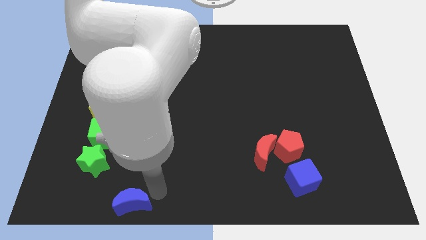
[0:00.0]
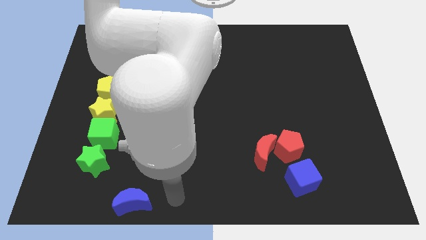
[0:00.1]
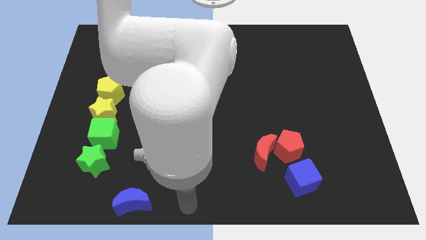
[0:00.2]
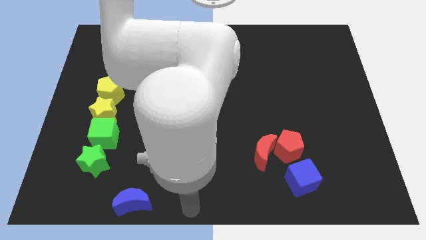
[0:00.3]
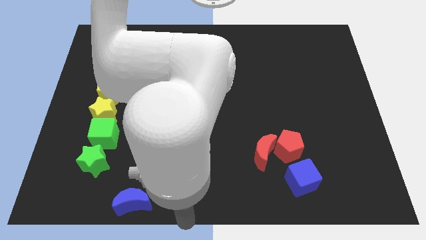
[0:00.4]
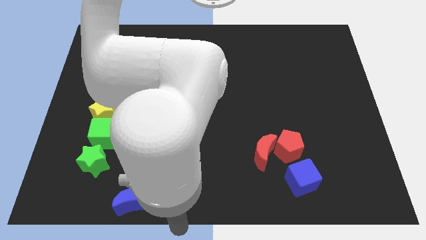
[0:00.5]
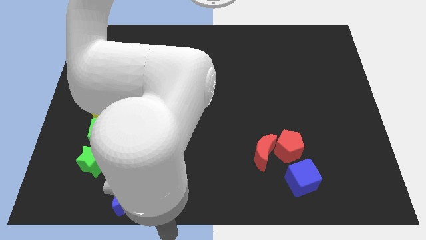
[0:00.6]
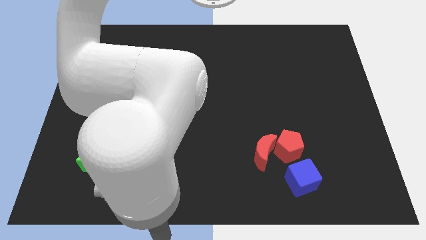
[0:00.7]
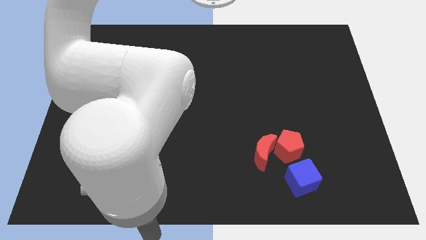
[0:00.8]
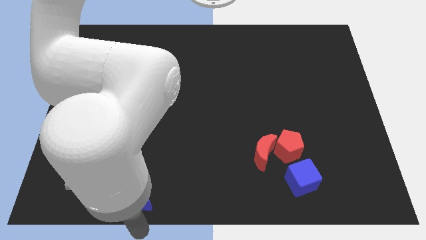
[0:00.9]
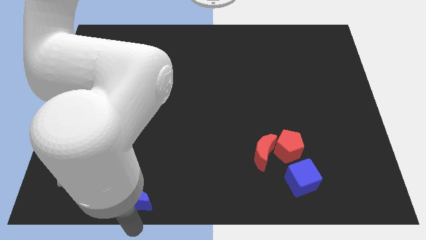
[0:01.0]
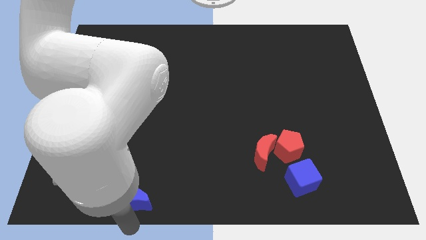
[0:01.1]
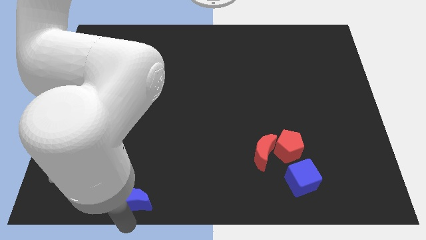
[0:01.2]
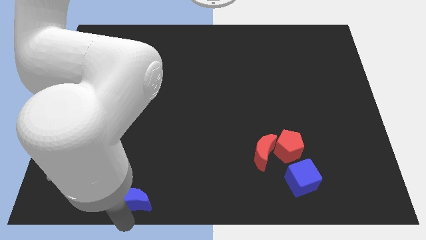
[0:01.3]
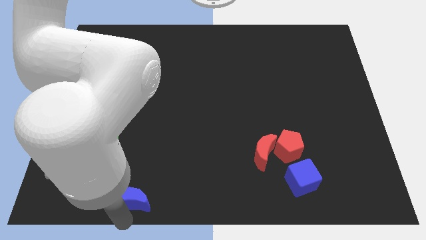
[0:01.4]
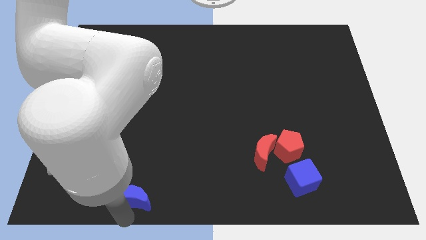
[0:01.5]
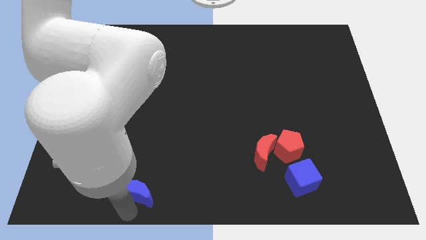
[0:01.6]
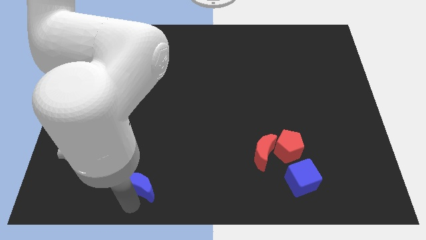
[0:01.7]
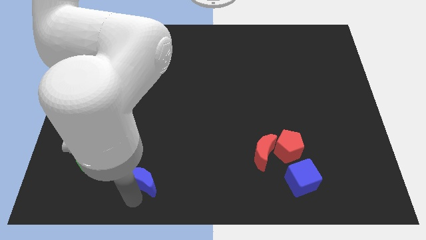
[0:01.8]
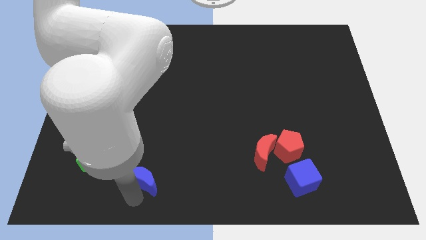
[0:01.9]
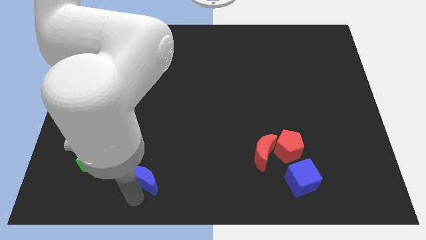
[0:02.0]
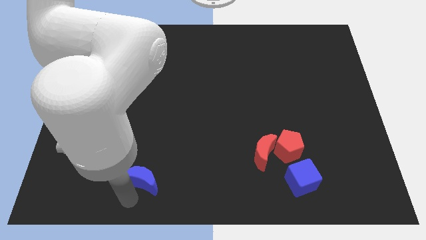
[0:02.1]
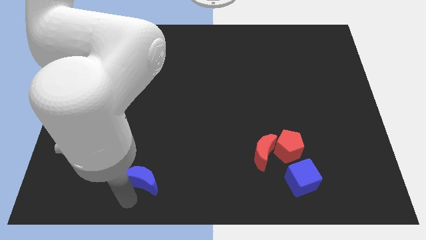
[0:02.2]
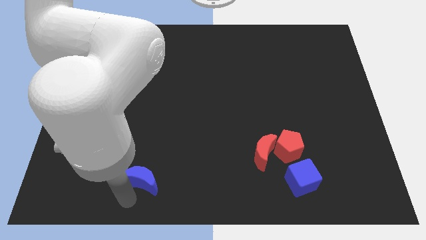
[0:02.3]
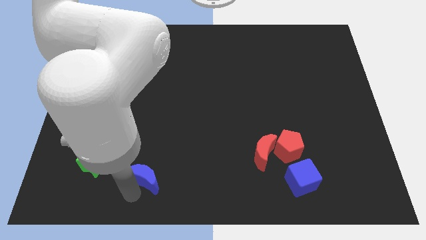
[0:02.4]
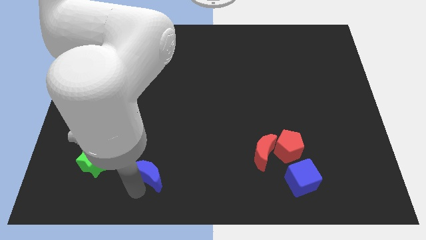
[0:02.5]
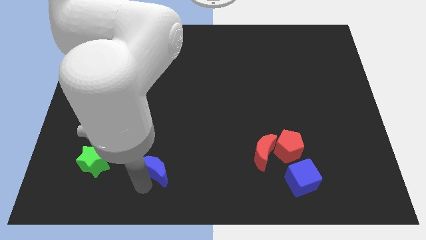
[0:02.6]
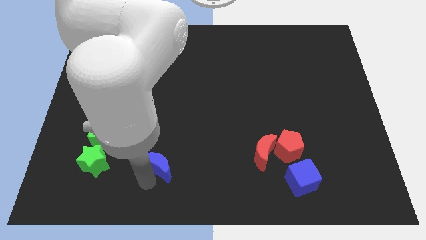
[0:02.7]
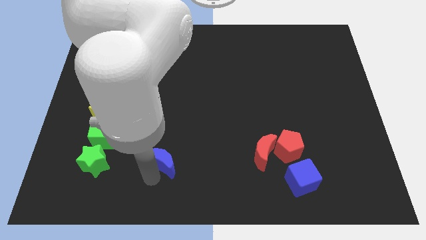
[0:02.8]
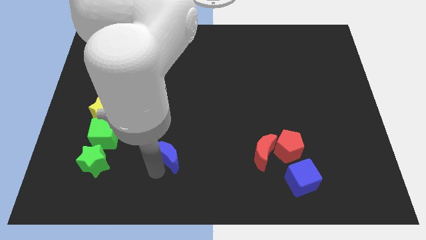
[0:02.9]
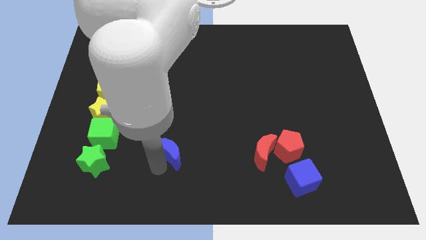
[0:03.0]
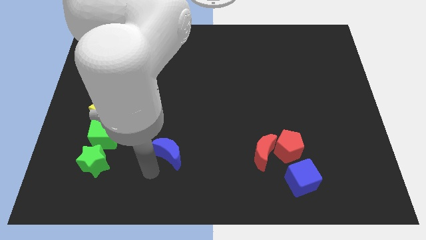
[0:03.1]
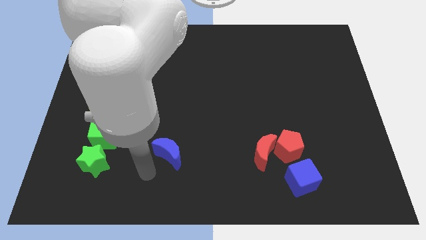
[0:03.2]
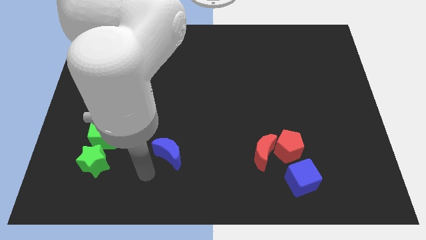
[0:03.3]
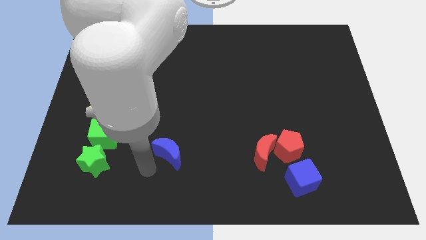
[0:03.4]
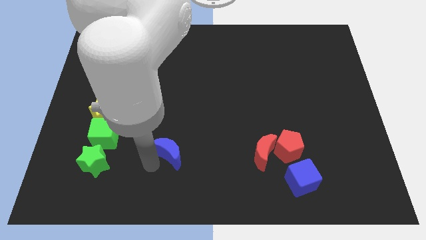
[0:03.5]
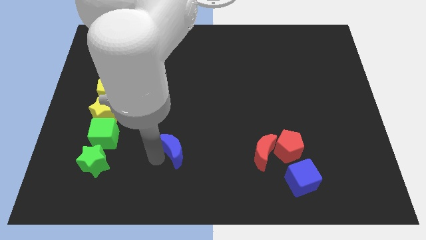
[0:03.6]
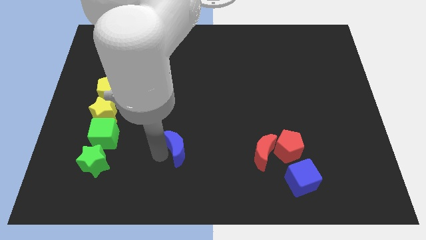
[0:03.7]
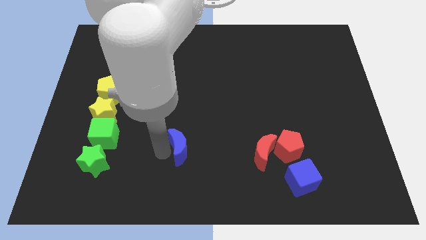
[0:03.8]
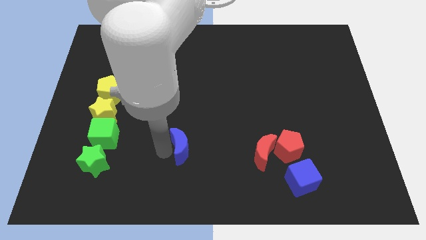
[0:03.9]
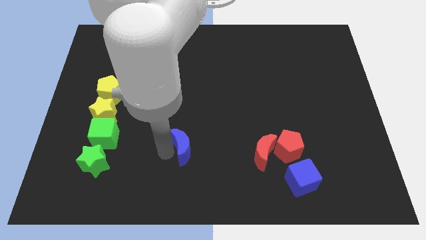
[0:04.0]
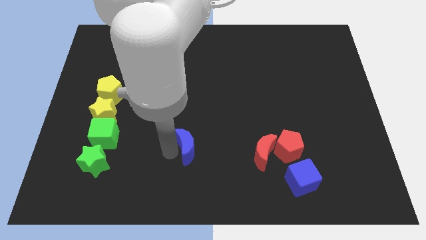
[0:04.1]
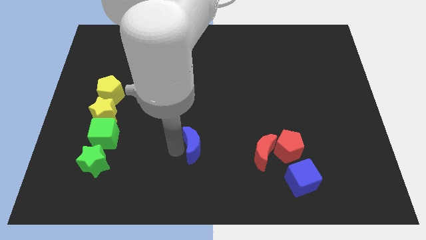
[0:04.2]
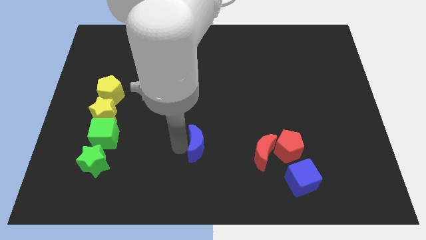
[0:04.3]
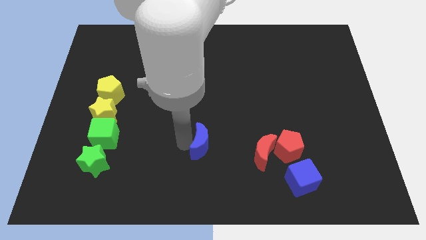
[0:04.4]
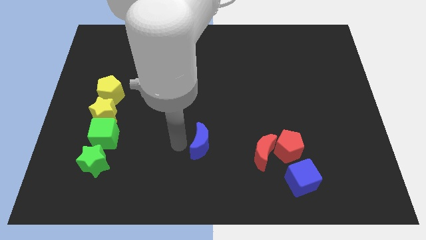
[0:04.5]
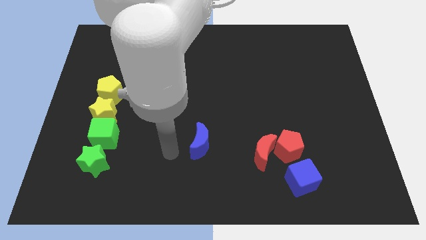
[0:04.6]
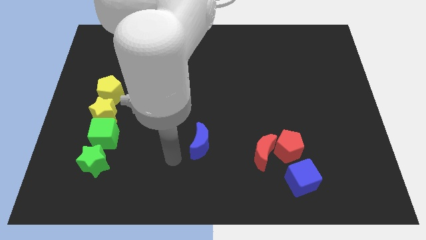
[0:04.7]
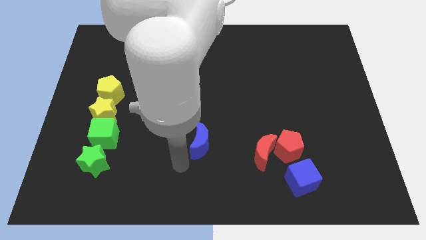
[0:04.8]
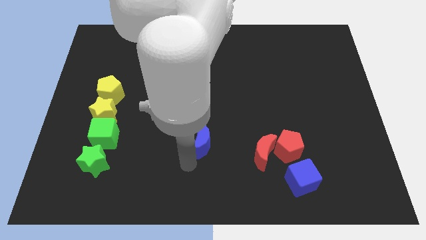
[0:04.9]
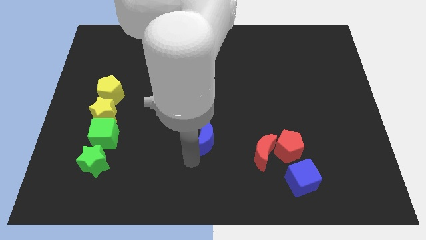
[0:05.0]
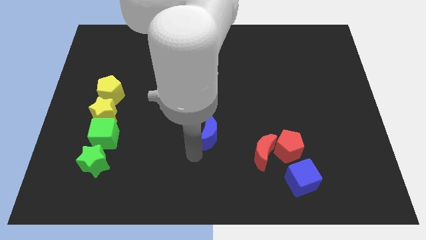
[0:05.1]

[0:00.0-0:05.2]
slide the blue moon horizontally to the right side of the green cube

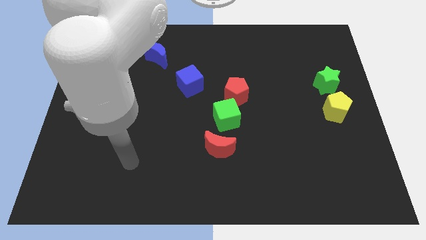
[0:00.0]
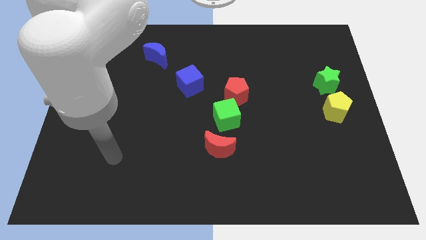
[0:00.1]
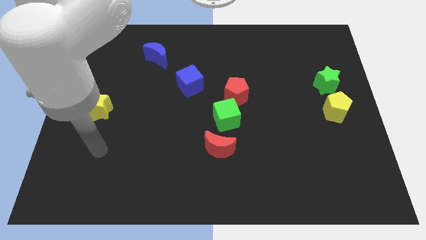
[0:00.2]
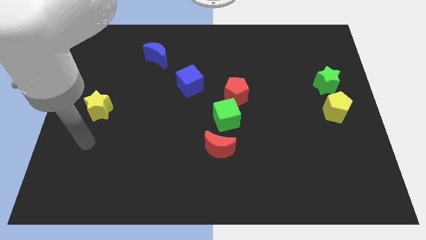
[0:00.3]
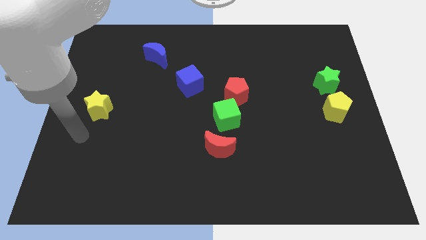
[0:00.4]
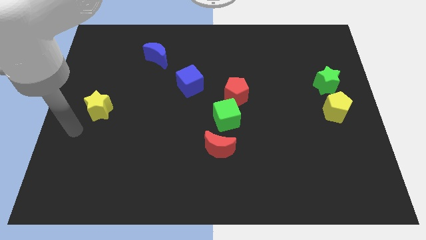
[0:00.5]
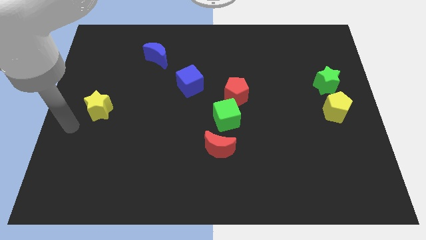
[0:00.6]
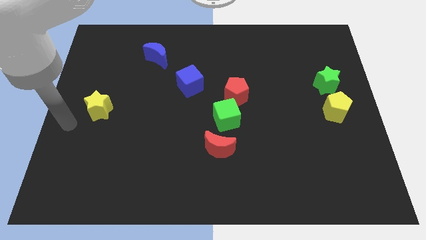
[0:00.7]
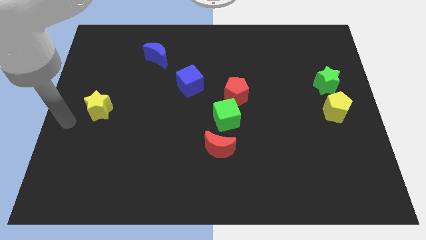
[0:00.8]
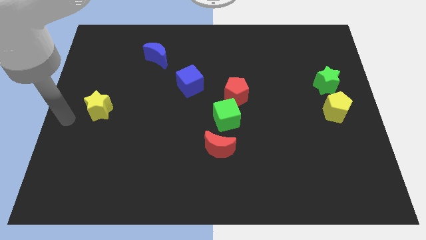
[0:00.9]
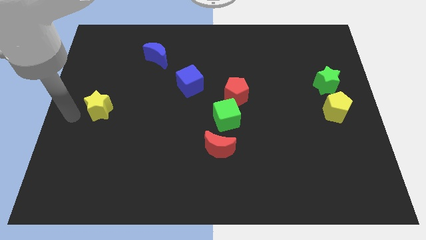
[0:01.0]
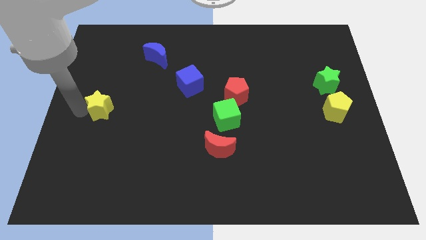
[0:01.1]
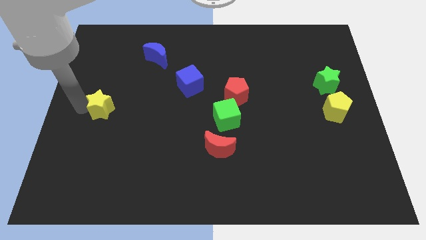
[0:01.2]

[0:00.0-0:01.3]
put your arm to the left of the yellow star

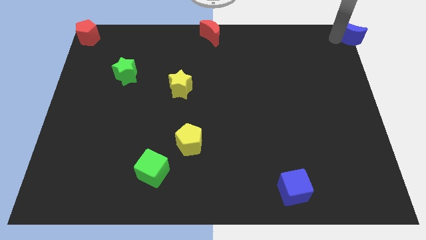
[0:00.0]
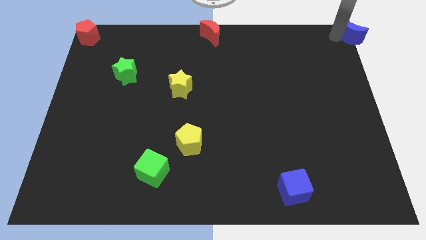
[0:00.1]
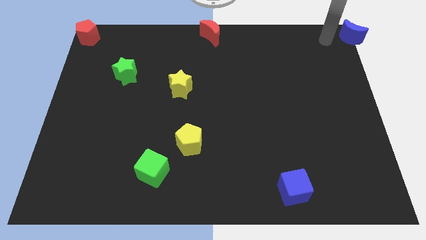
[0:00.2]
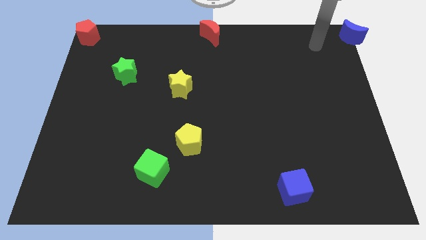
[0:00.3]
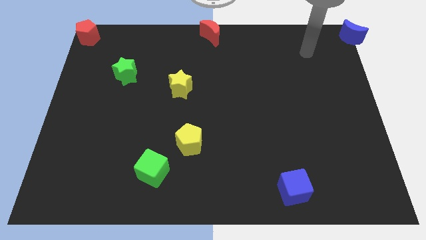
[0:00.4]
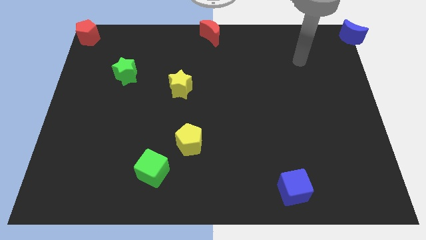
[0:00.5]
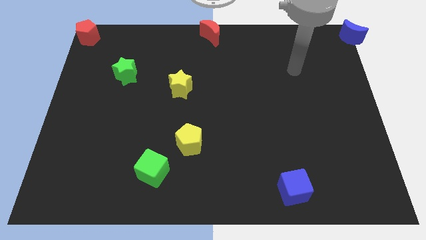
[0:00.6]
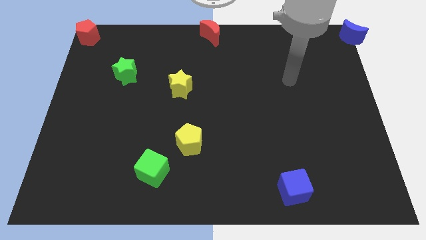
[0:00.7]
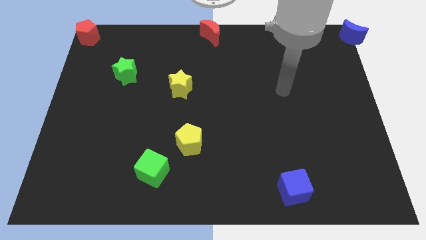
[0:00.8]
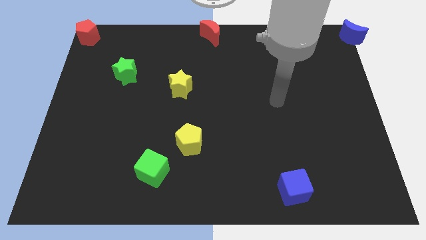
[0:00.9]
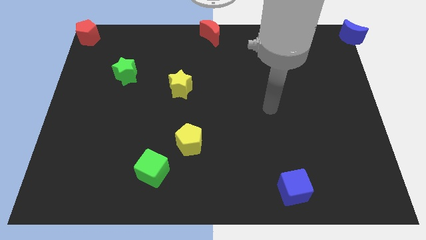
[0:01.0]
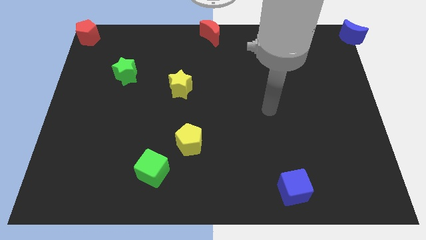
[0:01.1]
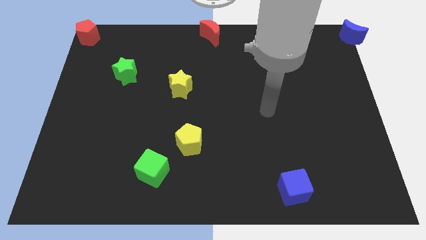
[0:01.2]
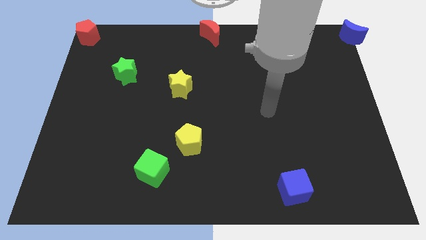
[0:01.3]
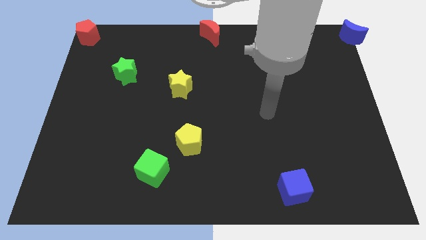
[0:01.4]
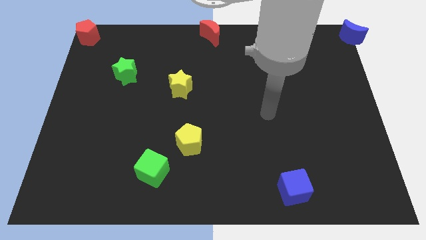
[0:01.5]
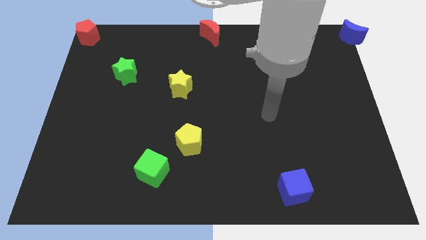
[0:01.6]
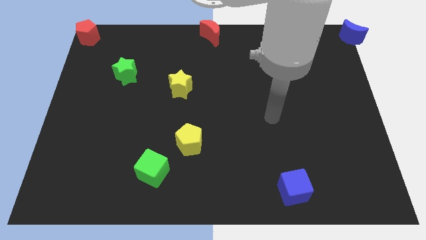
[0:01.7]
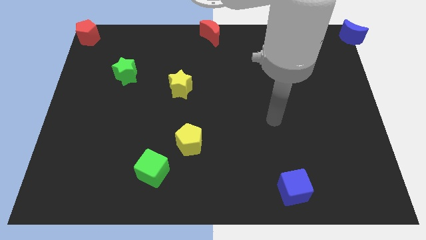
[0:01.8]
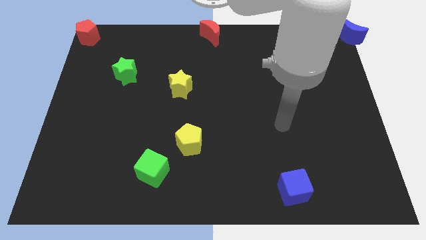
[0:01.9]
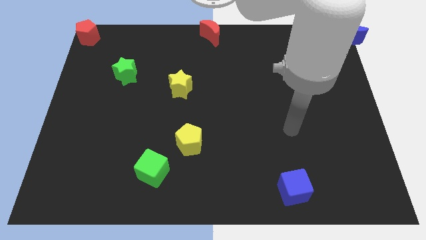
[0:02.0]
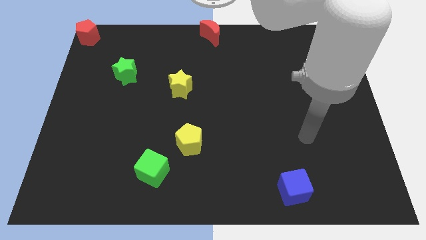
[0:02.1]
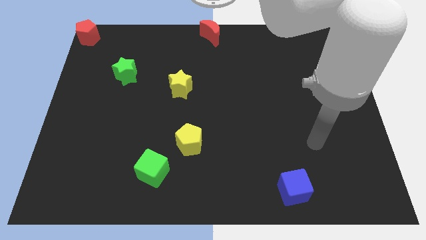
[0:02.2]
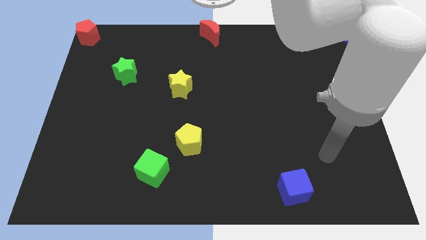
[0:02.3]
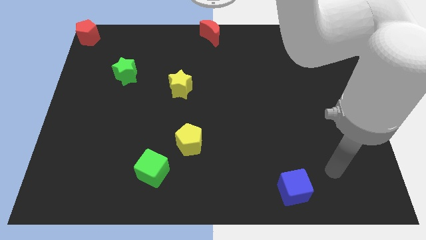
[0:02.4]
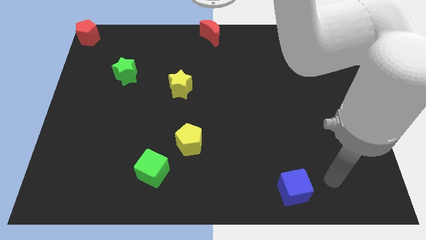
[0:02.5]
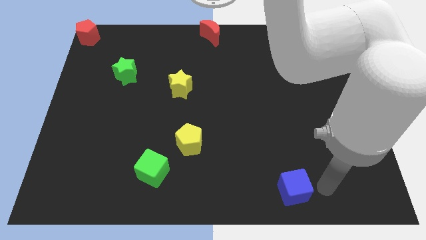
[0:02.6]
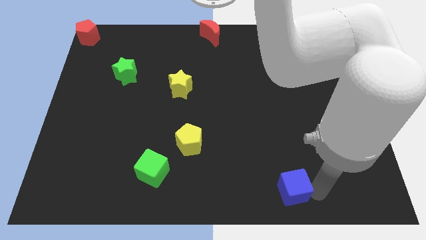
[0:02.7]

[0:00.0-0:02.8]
place arm near blue cube
